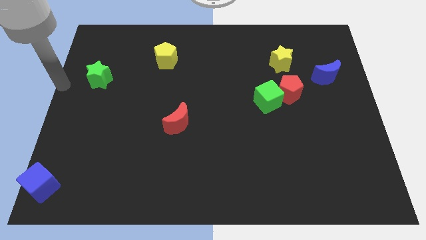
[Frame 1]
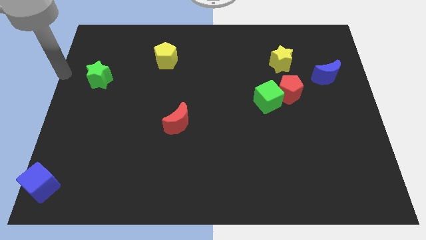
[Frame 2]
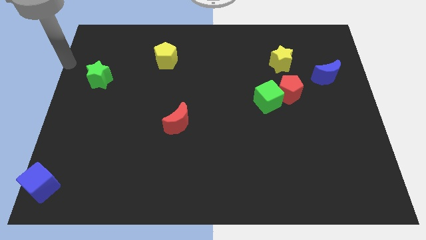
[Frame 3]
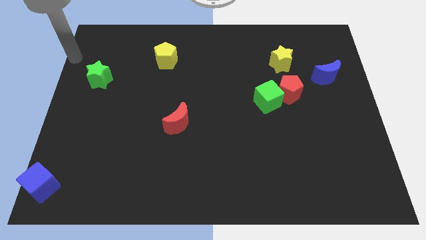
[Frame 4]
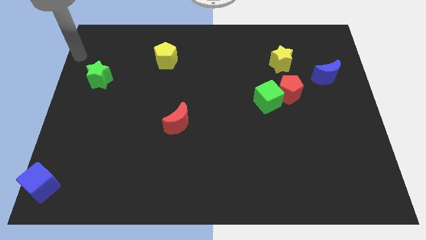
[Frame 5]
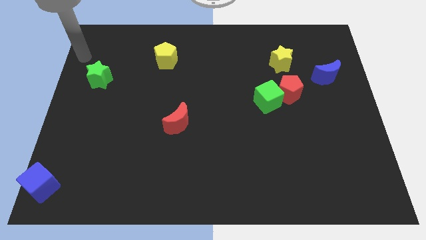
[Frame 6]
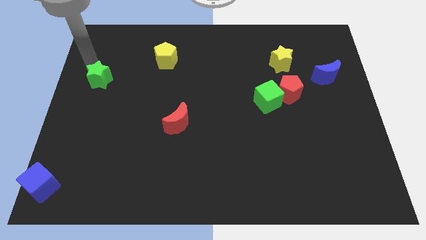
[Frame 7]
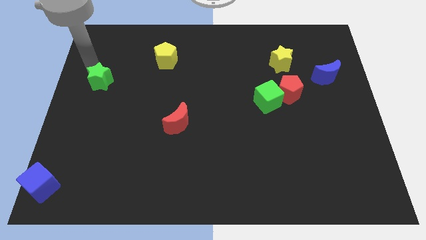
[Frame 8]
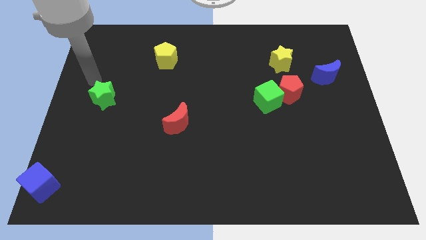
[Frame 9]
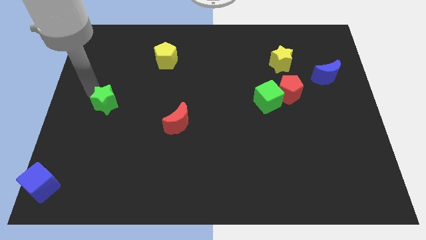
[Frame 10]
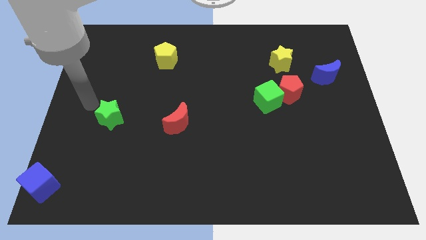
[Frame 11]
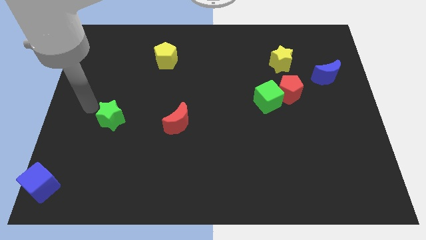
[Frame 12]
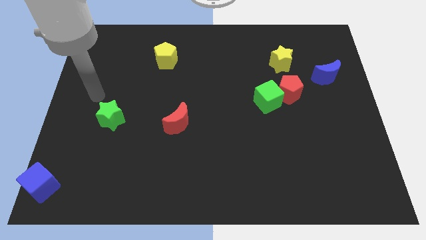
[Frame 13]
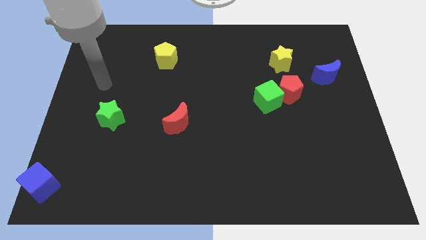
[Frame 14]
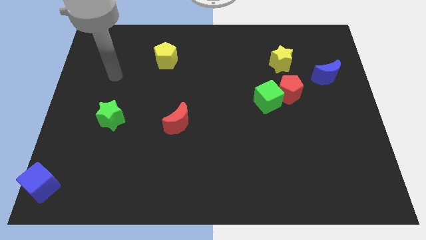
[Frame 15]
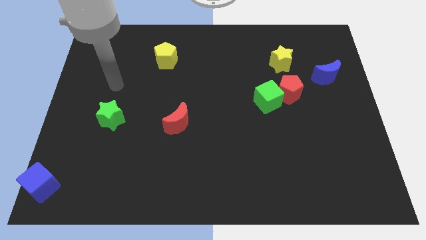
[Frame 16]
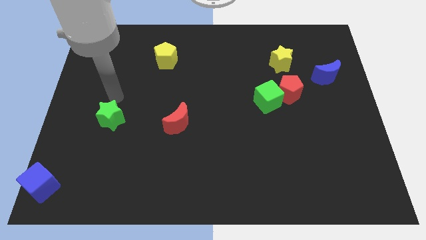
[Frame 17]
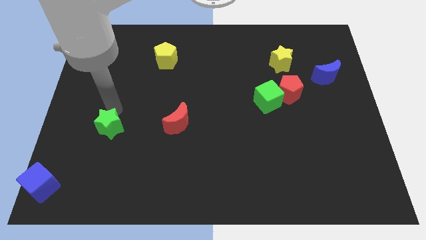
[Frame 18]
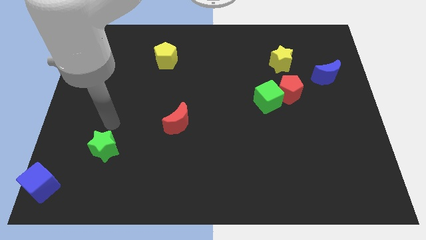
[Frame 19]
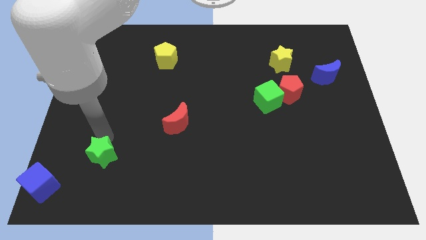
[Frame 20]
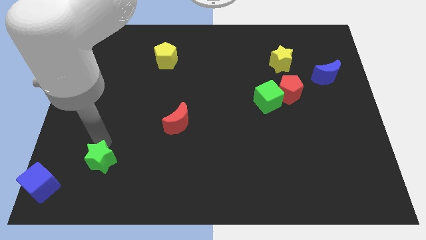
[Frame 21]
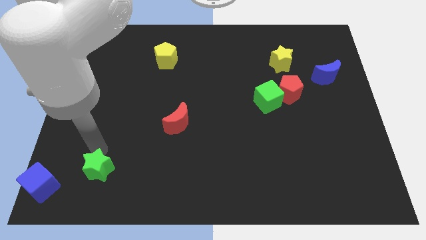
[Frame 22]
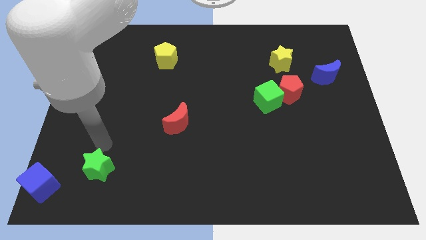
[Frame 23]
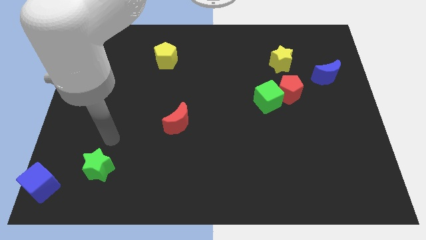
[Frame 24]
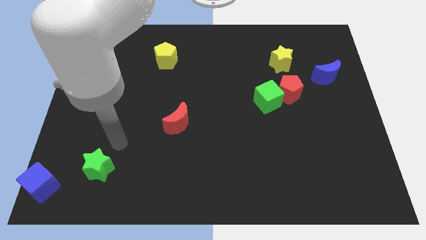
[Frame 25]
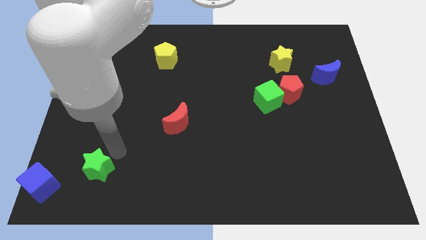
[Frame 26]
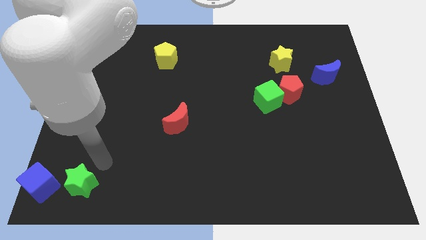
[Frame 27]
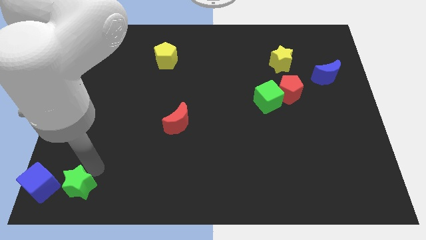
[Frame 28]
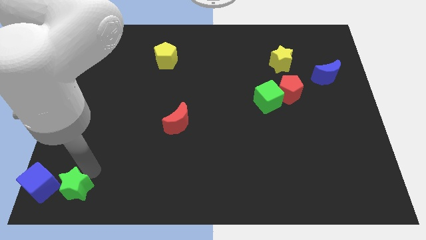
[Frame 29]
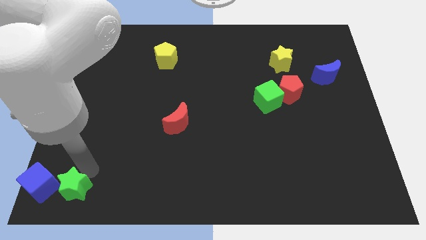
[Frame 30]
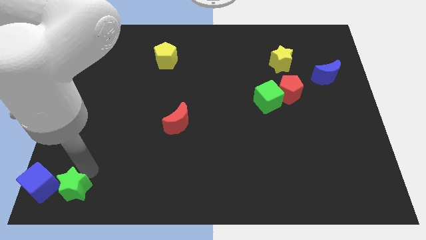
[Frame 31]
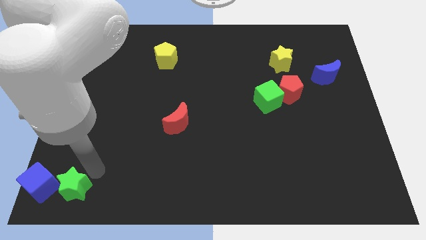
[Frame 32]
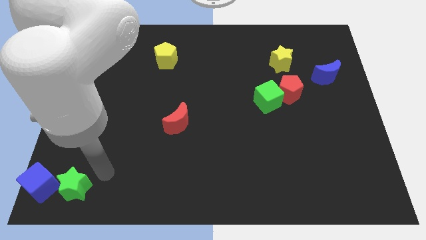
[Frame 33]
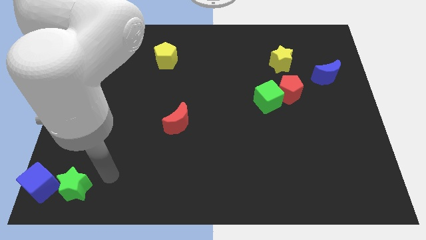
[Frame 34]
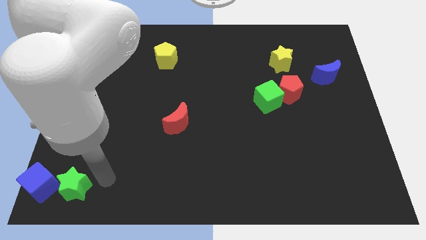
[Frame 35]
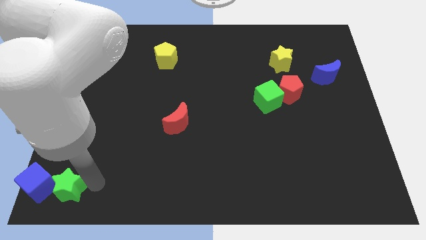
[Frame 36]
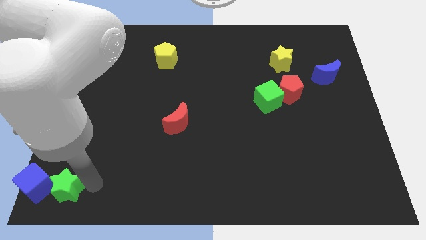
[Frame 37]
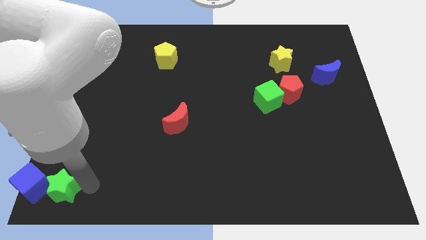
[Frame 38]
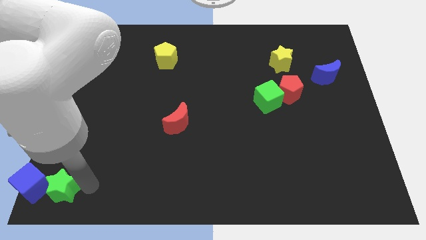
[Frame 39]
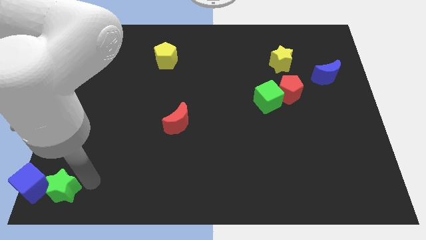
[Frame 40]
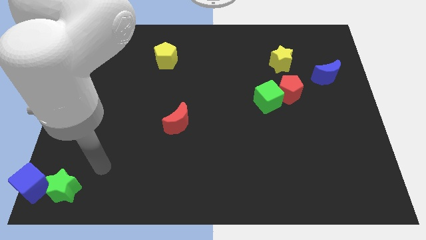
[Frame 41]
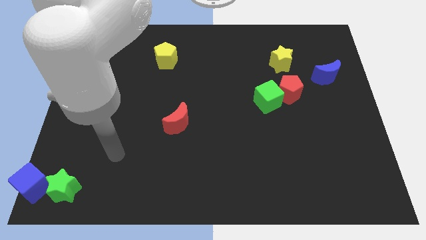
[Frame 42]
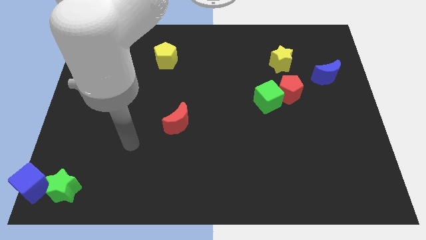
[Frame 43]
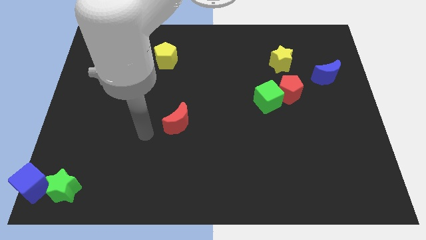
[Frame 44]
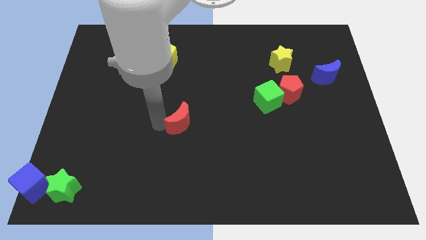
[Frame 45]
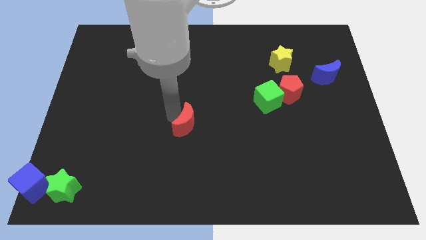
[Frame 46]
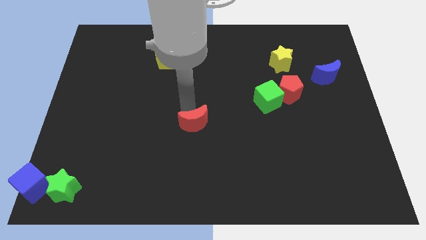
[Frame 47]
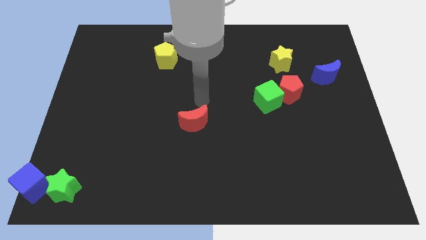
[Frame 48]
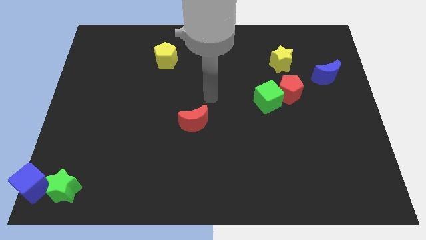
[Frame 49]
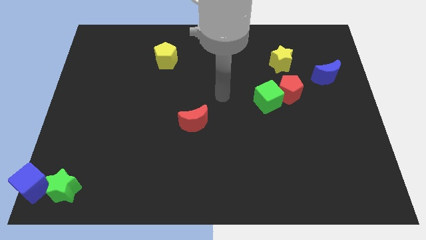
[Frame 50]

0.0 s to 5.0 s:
push the green star towards the right side of the blue cube

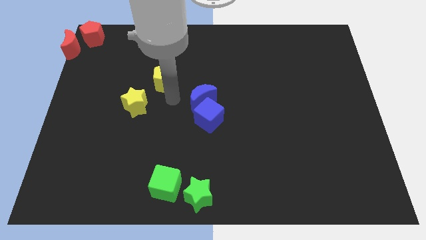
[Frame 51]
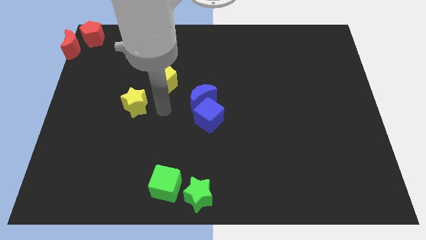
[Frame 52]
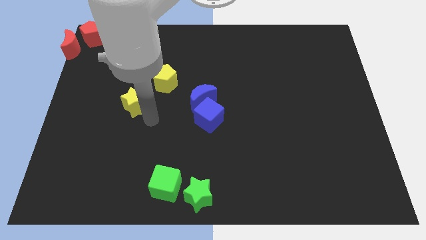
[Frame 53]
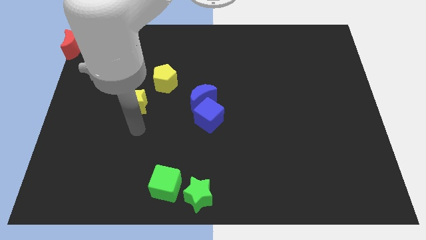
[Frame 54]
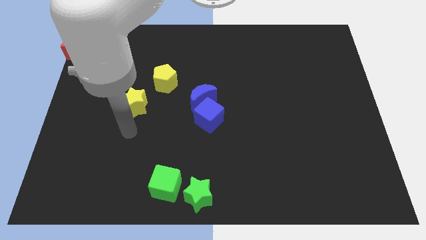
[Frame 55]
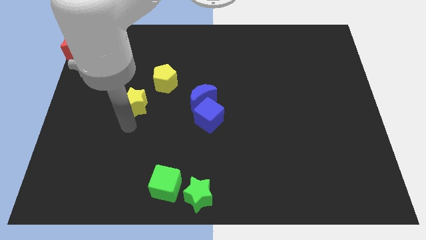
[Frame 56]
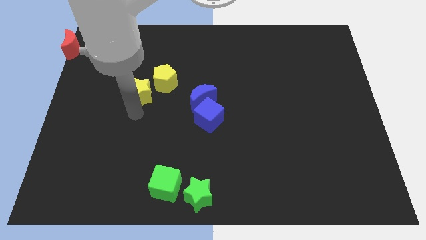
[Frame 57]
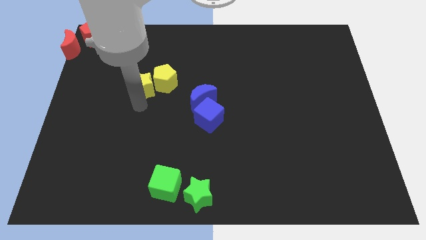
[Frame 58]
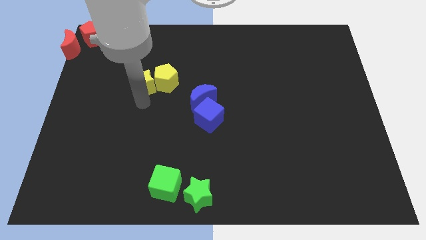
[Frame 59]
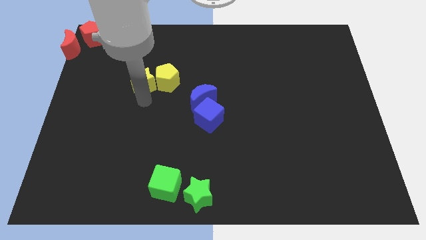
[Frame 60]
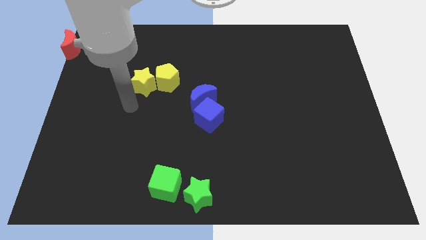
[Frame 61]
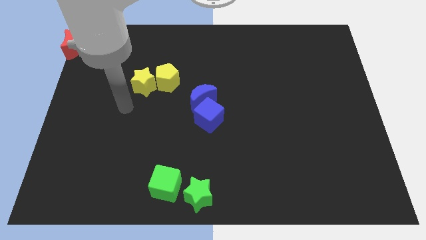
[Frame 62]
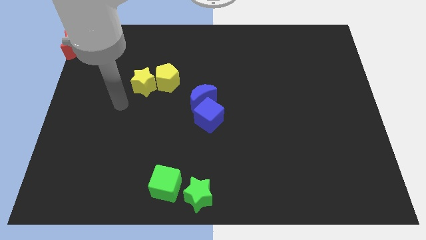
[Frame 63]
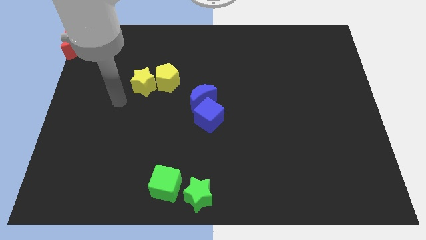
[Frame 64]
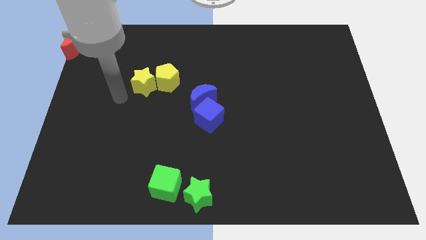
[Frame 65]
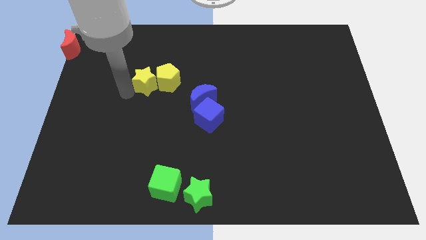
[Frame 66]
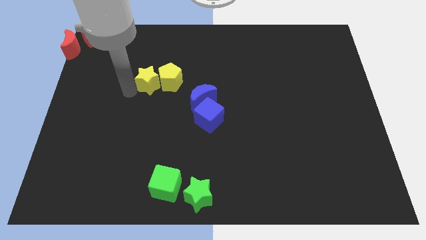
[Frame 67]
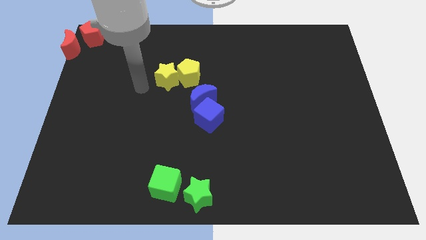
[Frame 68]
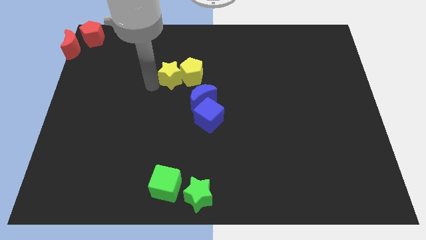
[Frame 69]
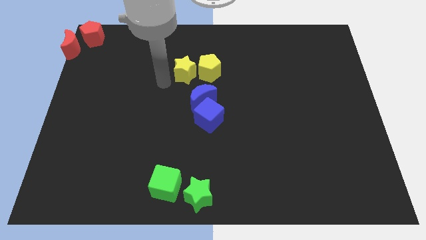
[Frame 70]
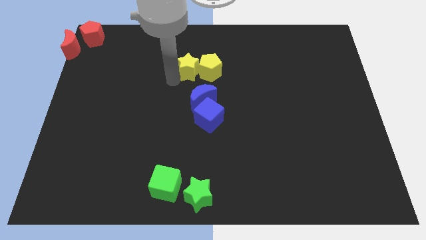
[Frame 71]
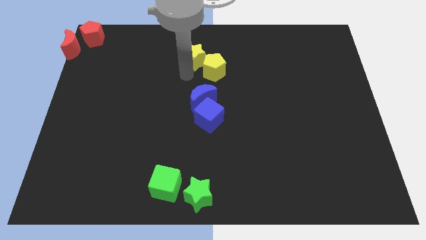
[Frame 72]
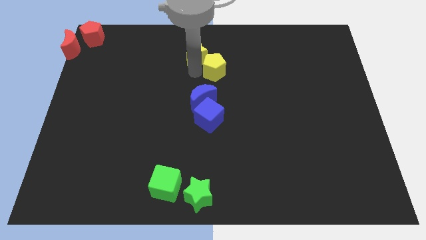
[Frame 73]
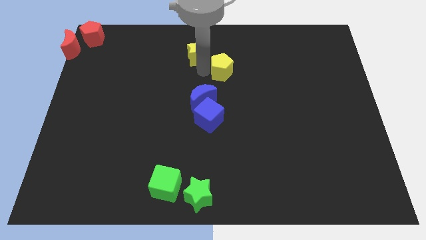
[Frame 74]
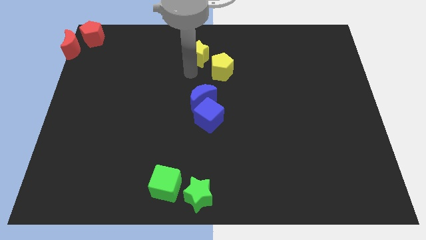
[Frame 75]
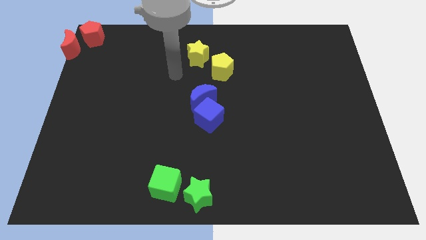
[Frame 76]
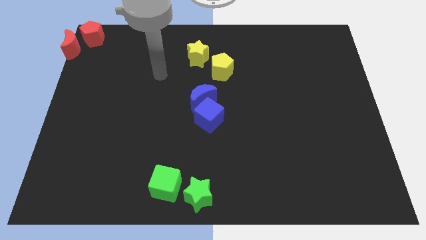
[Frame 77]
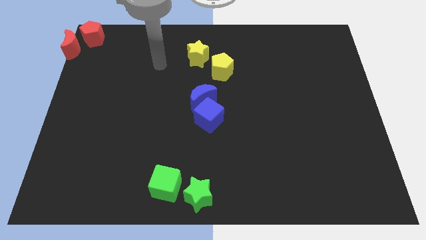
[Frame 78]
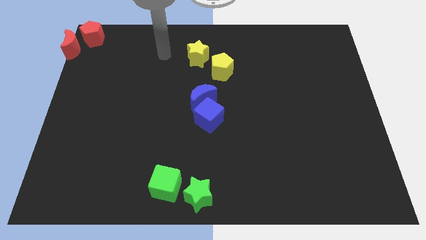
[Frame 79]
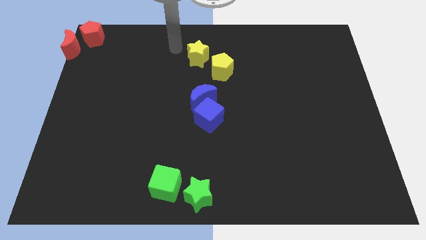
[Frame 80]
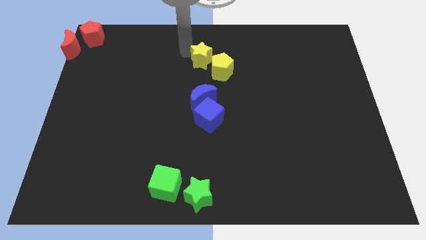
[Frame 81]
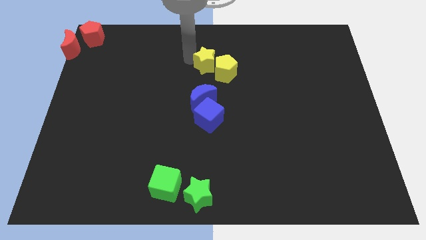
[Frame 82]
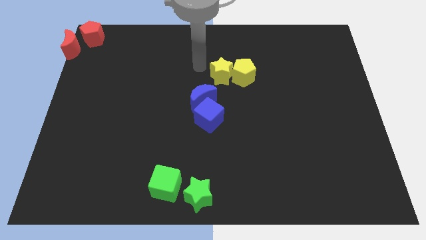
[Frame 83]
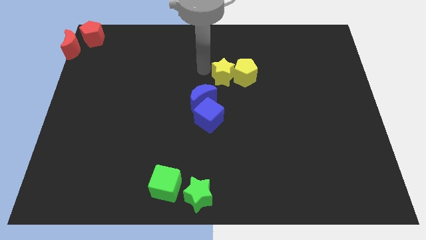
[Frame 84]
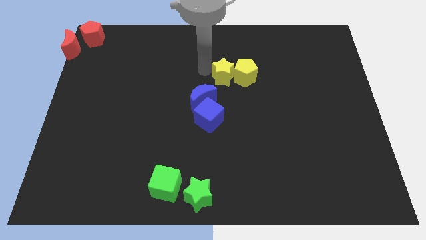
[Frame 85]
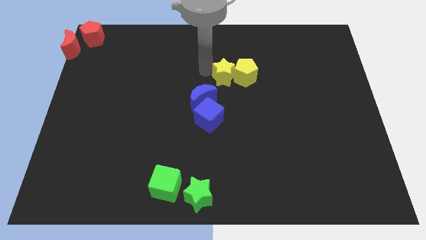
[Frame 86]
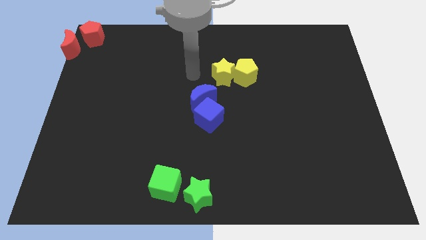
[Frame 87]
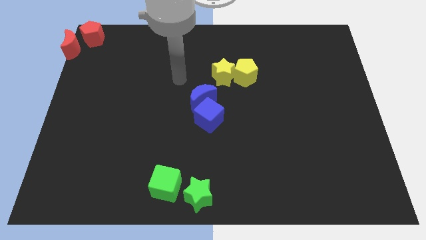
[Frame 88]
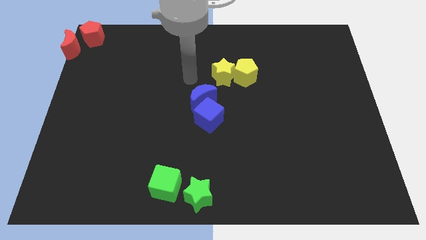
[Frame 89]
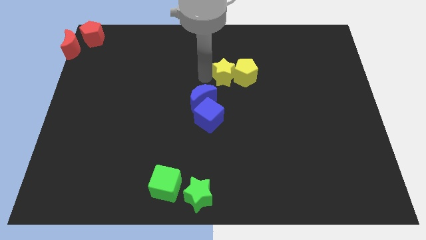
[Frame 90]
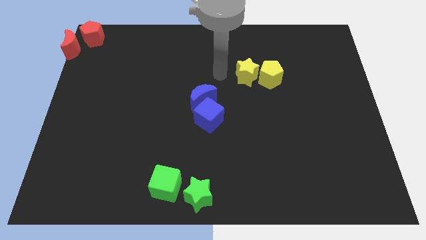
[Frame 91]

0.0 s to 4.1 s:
move yellow star along with yellow pentagon towards the top right of the blue crescent
